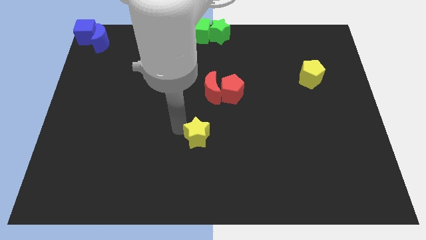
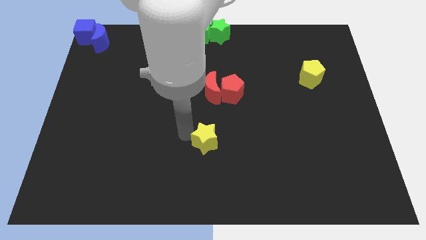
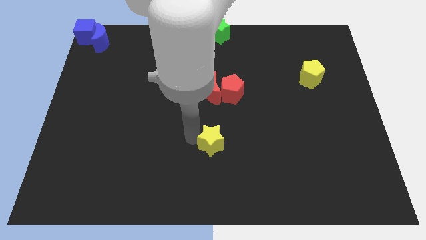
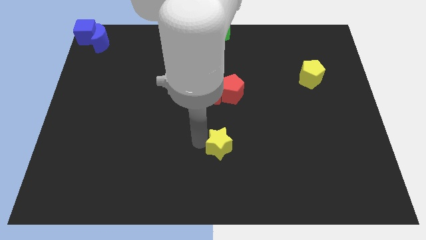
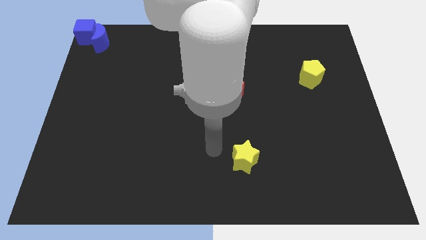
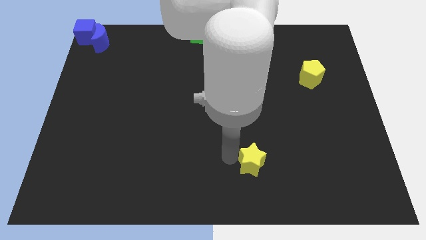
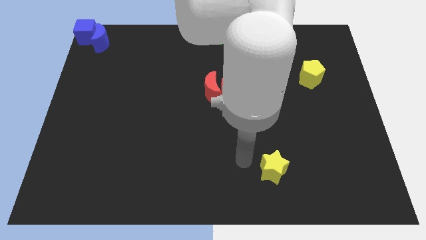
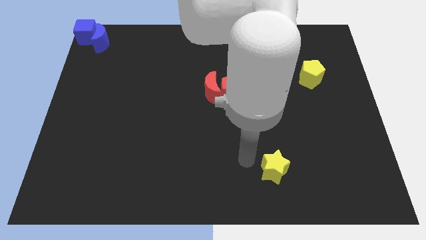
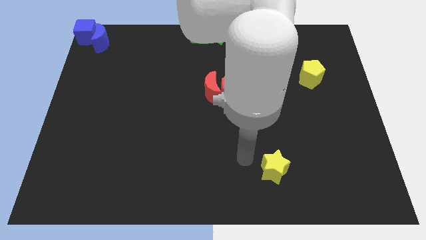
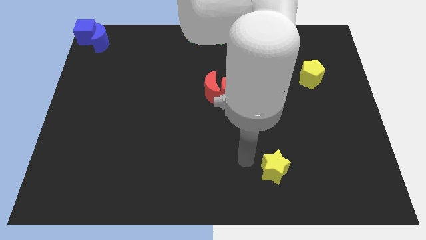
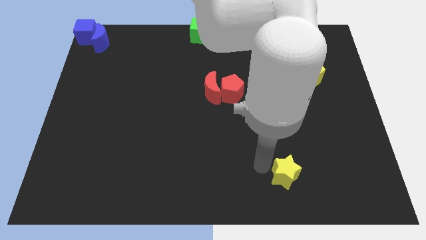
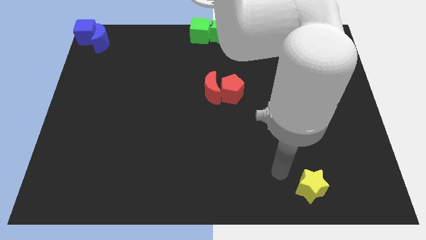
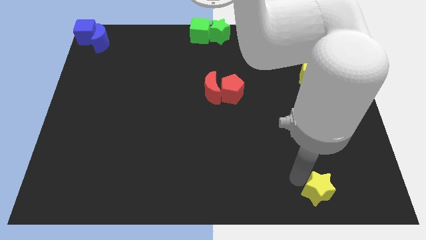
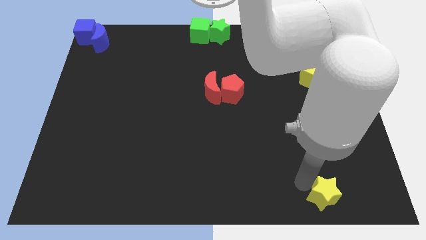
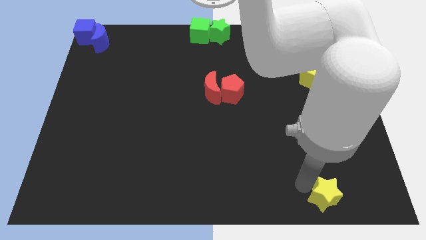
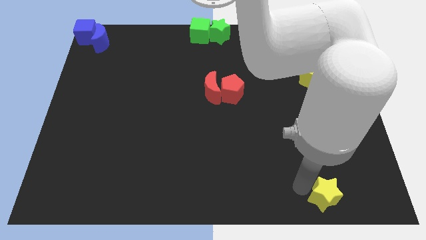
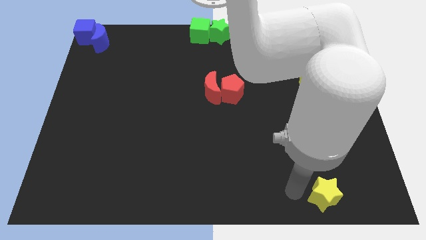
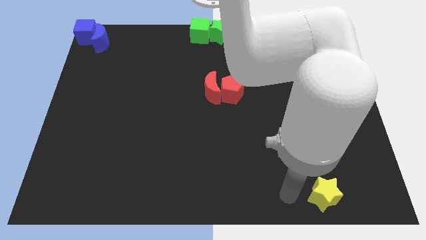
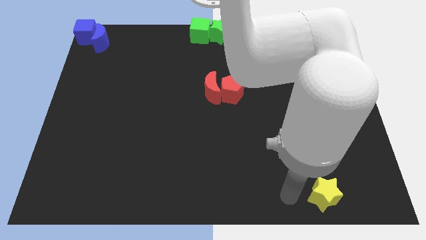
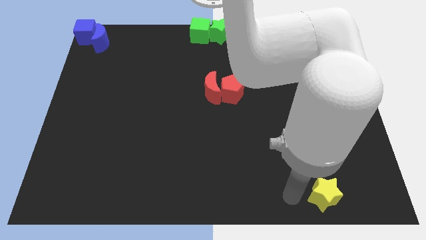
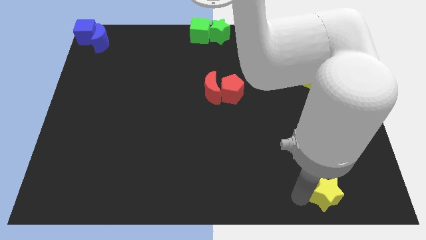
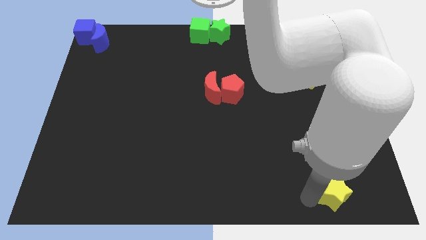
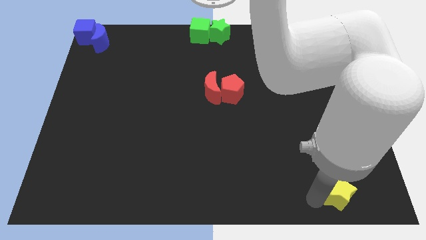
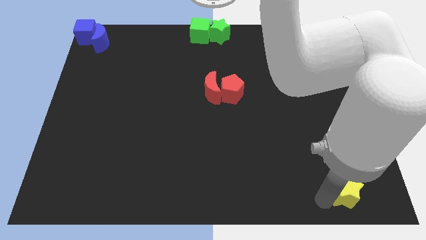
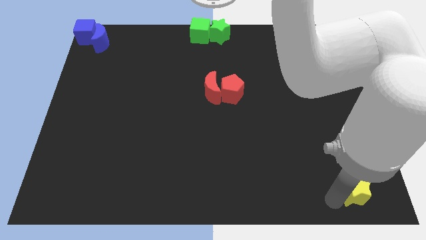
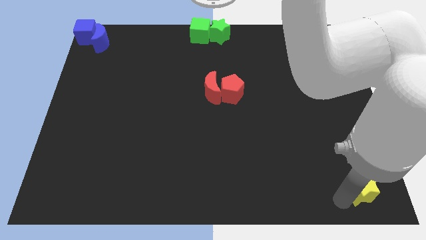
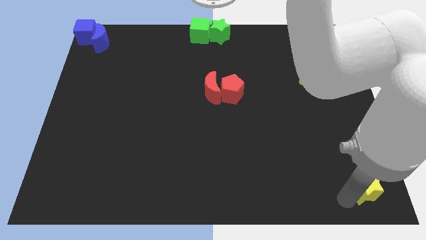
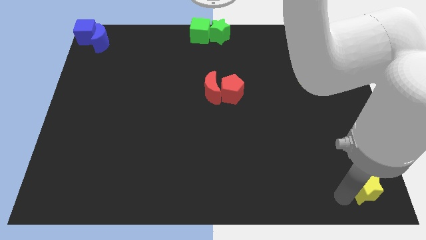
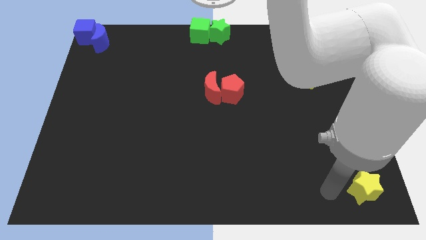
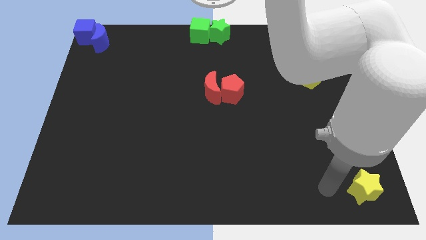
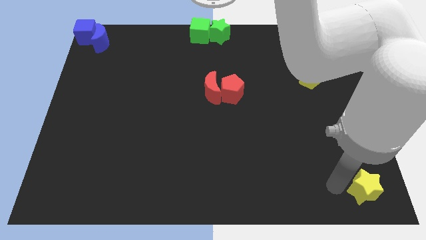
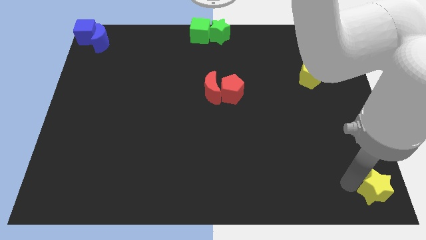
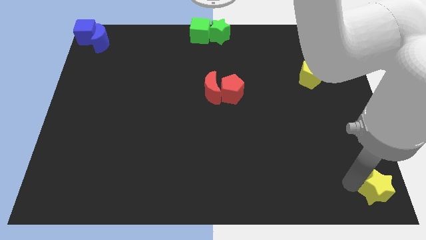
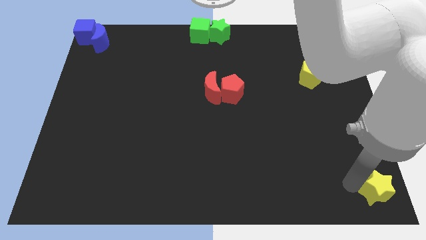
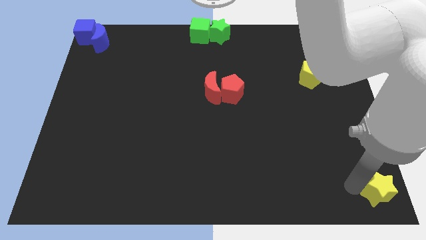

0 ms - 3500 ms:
push the yellow star to the bottom right corner of the board

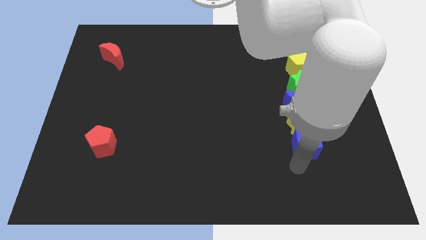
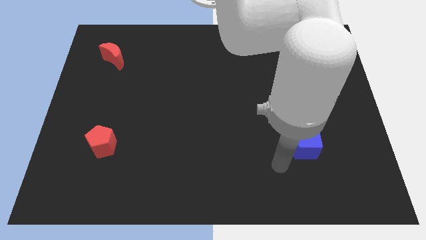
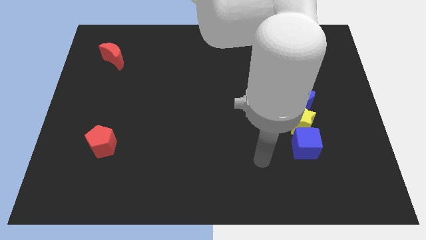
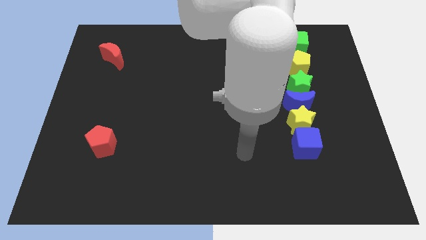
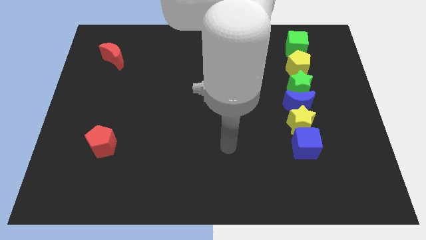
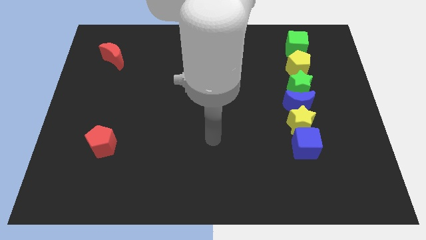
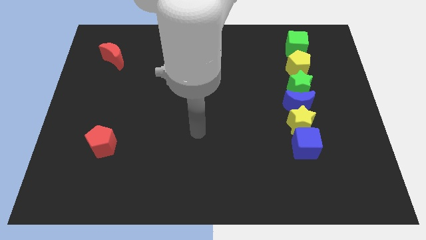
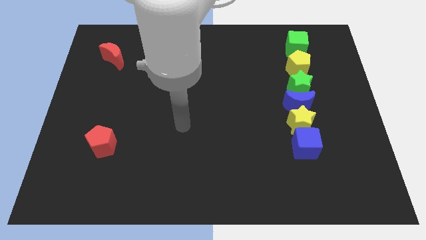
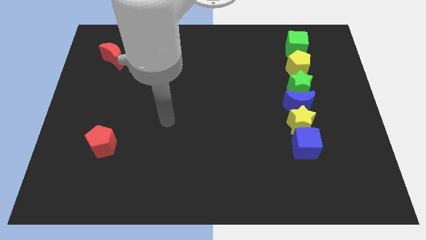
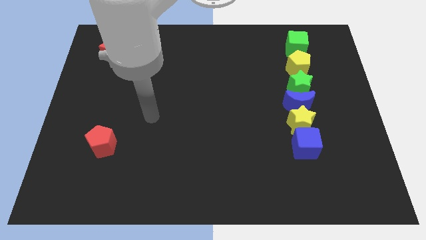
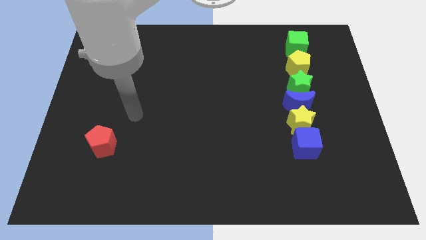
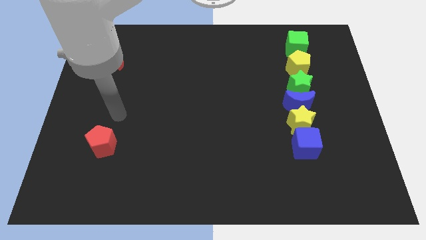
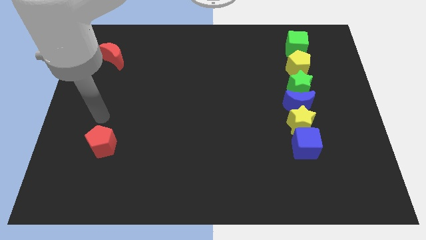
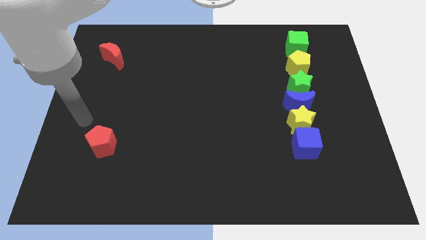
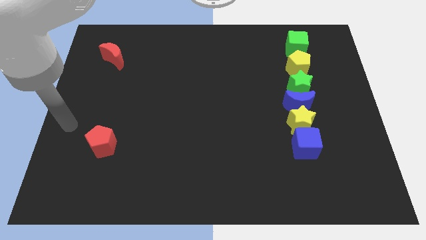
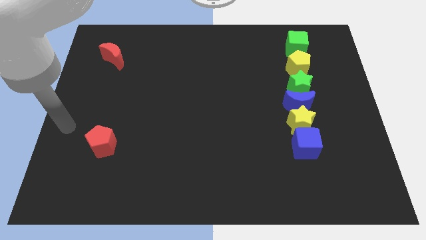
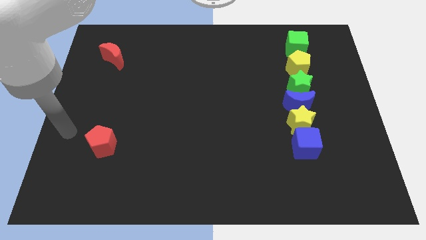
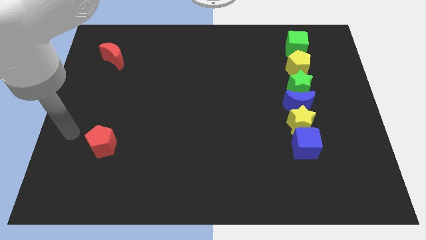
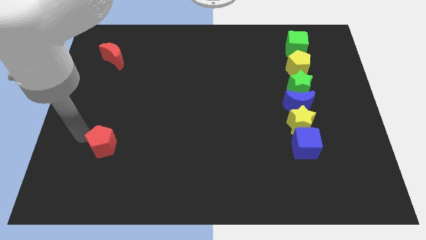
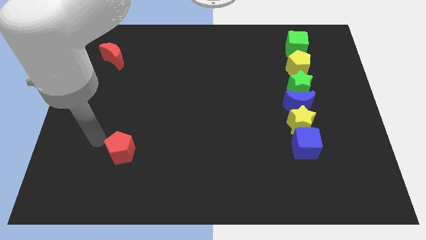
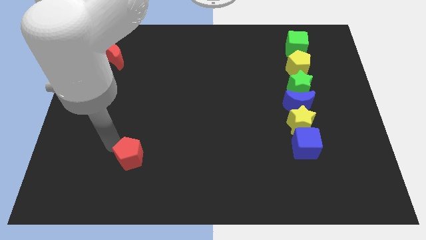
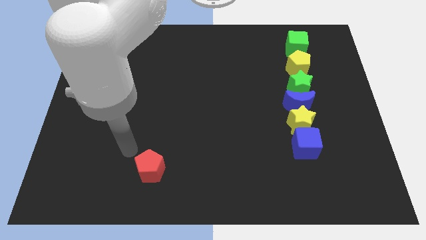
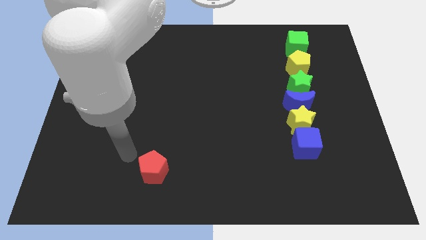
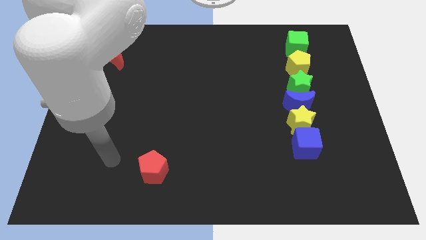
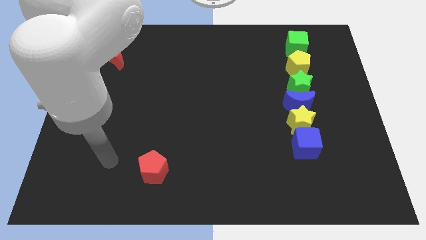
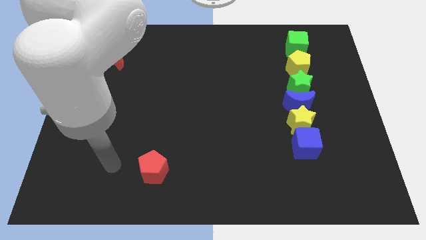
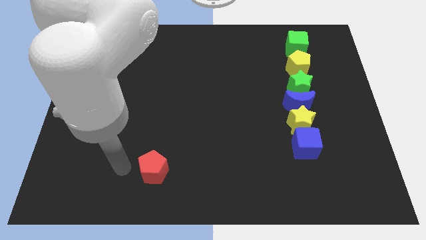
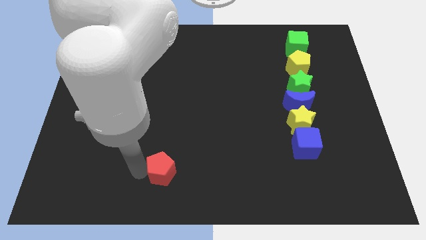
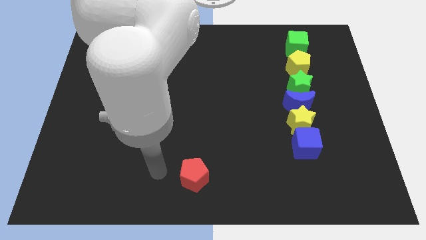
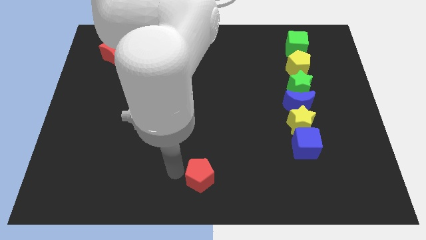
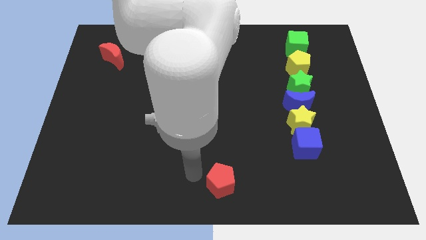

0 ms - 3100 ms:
place the red pentagon at bottom center of the board

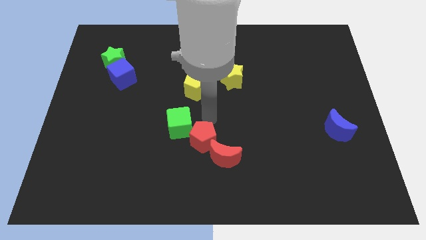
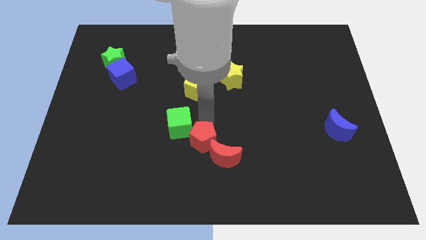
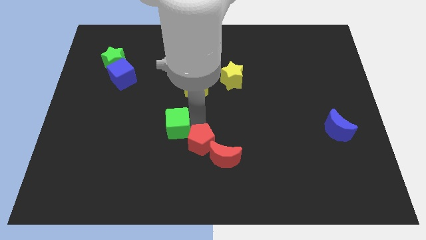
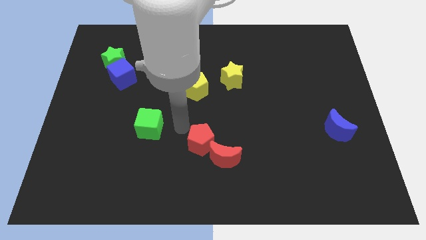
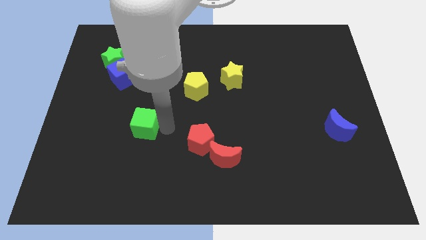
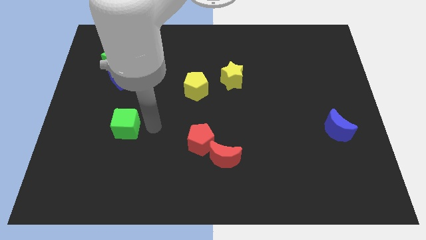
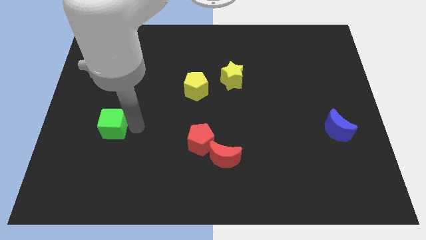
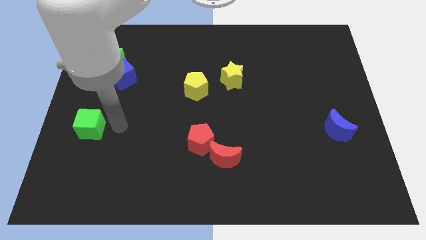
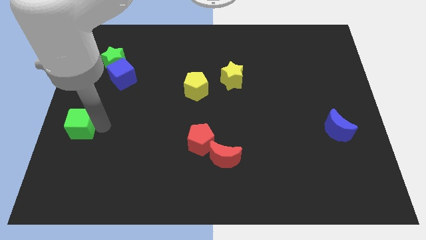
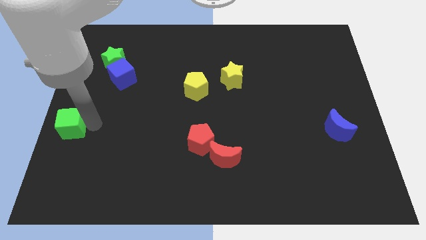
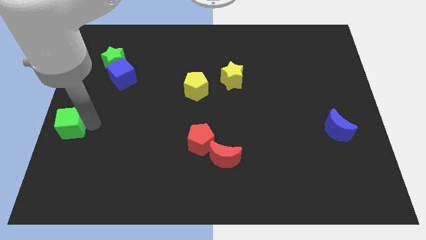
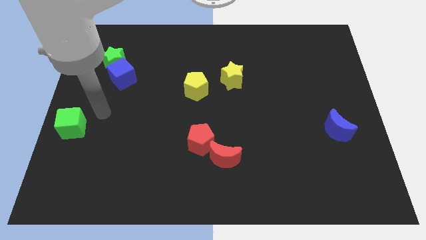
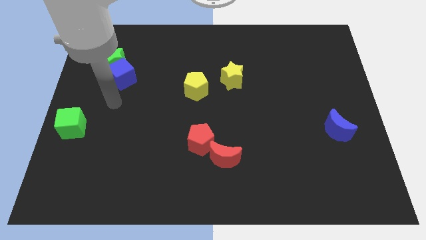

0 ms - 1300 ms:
move the green cube to the left center

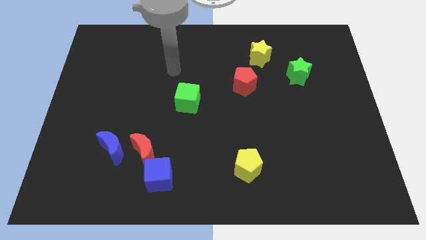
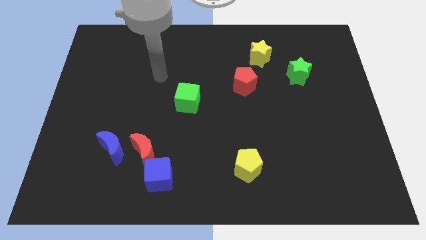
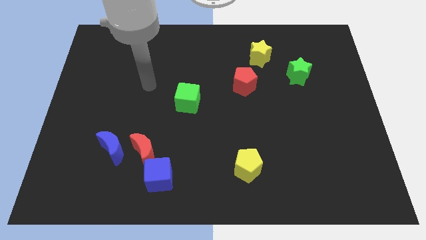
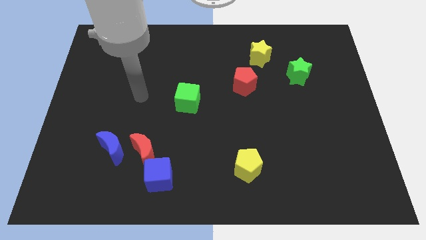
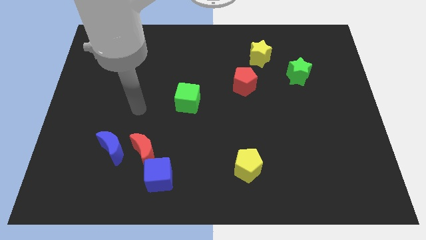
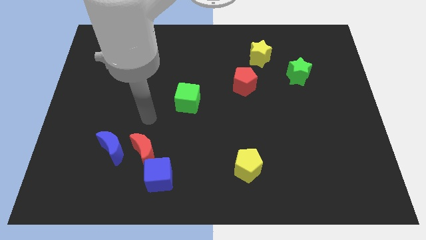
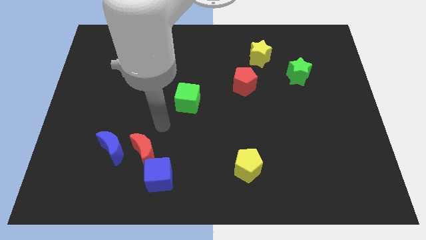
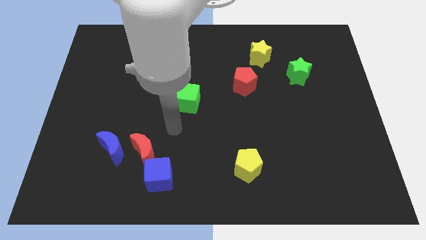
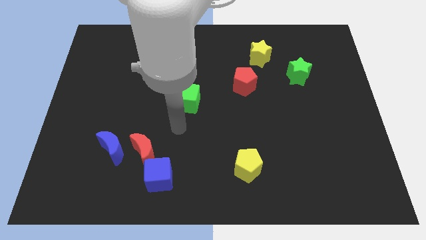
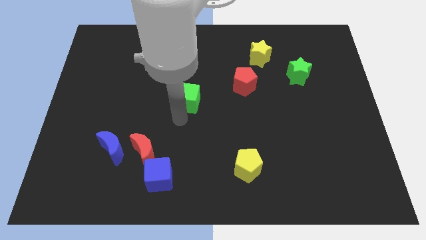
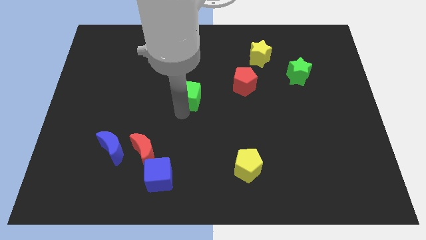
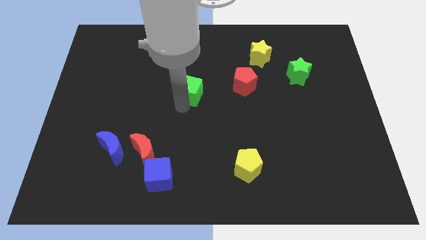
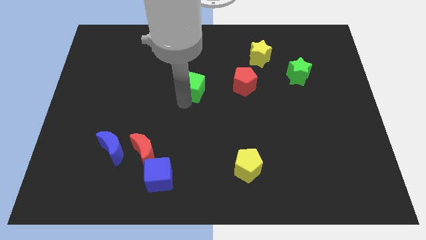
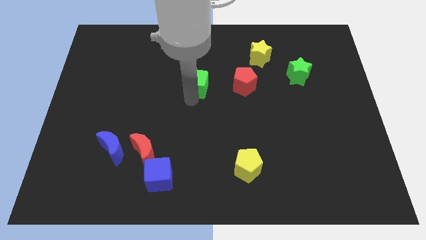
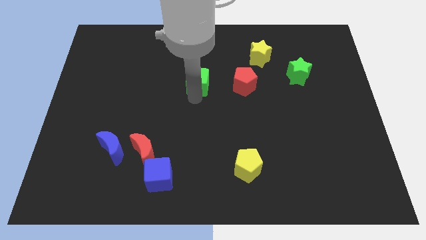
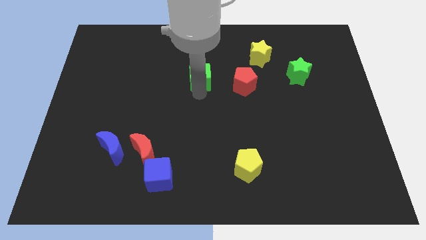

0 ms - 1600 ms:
place the green cube parallel to red pentagon
